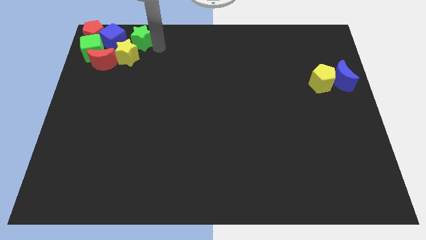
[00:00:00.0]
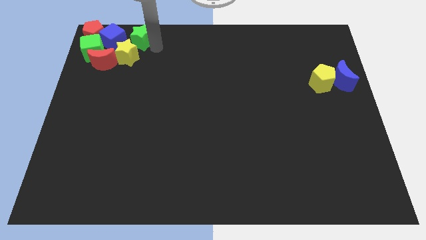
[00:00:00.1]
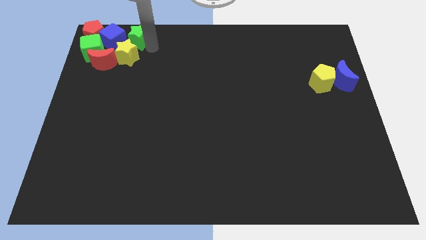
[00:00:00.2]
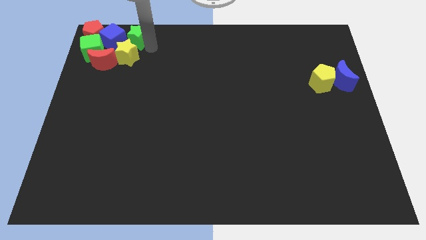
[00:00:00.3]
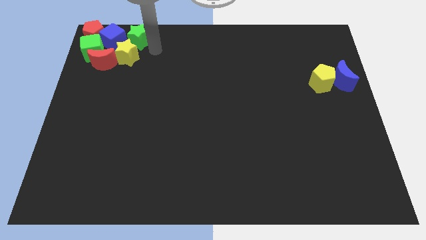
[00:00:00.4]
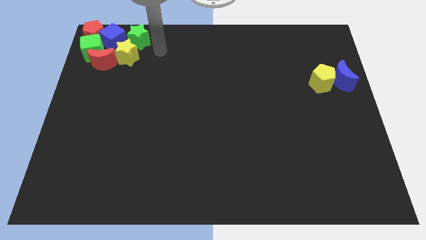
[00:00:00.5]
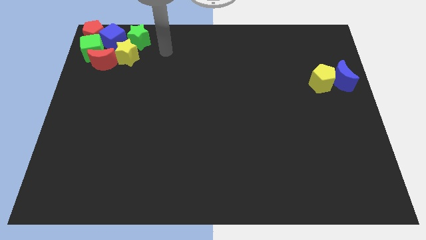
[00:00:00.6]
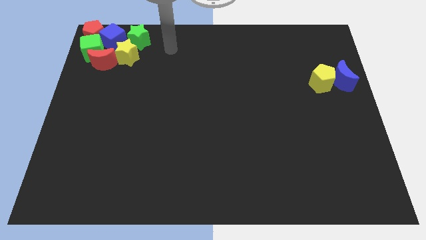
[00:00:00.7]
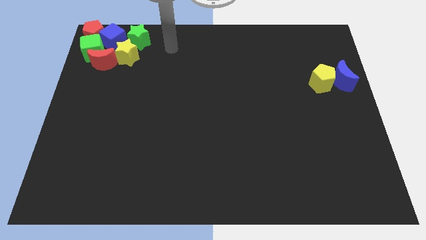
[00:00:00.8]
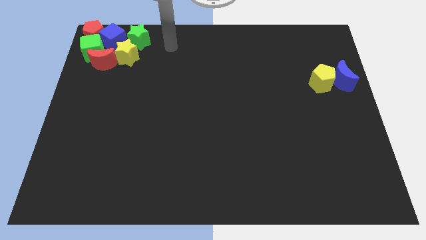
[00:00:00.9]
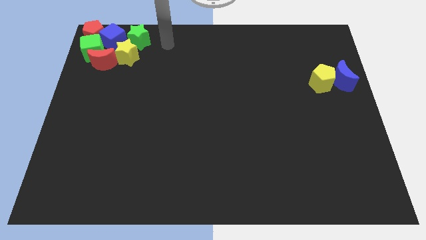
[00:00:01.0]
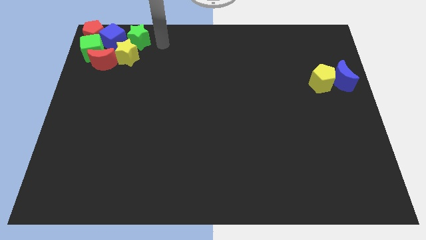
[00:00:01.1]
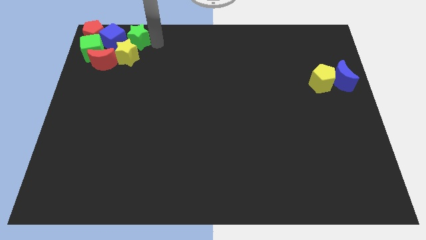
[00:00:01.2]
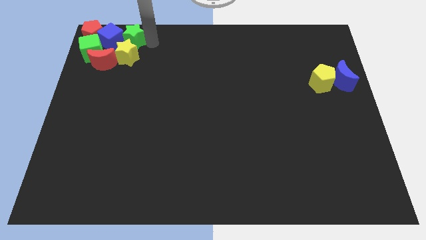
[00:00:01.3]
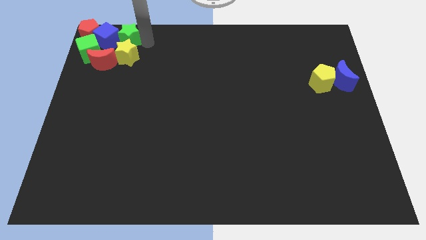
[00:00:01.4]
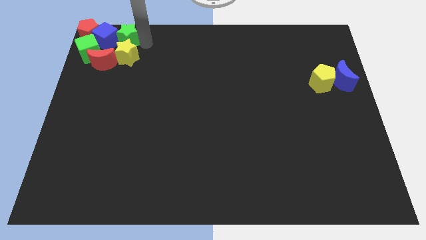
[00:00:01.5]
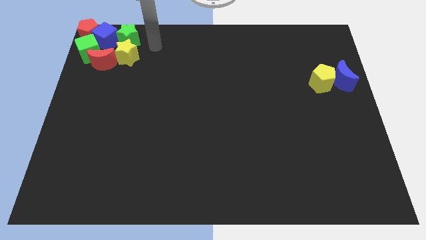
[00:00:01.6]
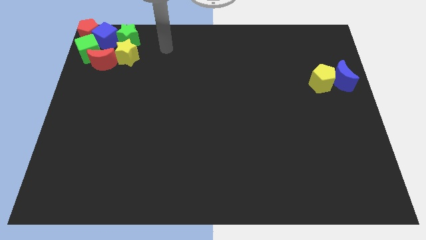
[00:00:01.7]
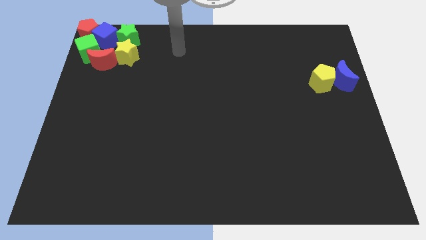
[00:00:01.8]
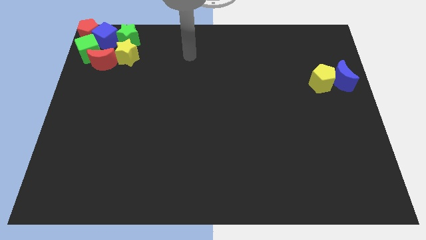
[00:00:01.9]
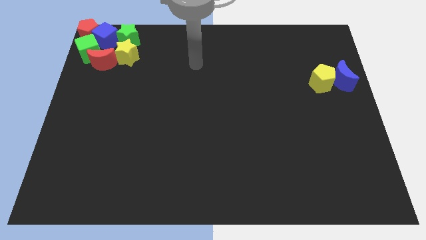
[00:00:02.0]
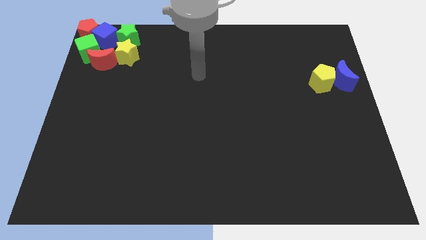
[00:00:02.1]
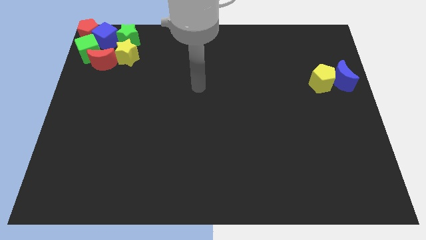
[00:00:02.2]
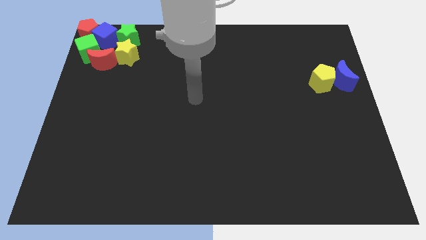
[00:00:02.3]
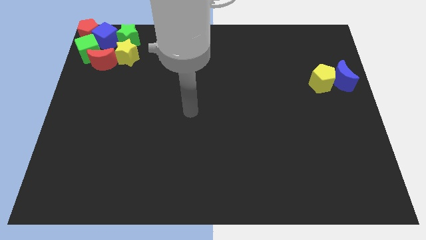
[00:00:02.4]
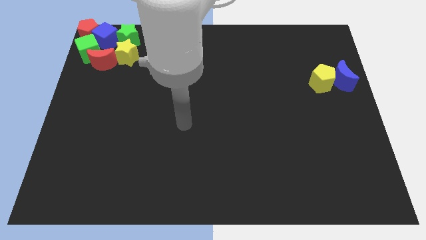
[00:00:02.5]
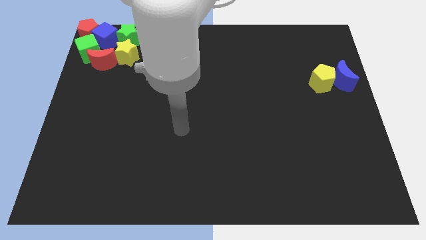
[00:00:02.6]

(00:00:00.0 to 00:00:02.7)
push the green star into the blue cube

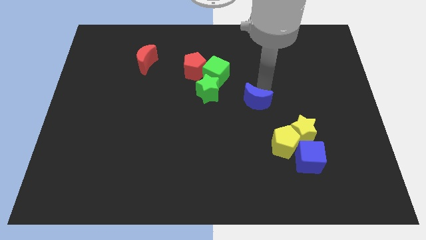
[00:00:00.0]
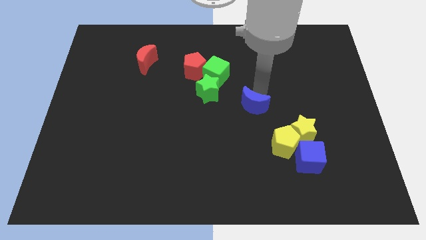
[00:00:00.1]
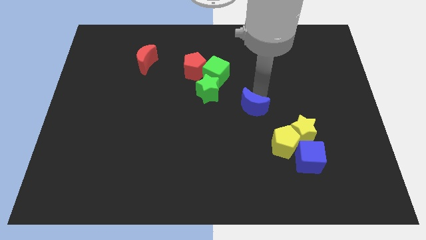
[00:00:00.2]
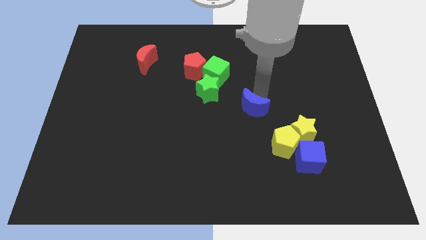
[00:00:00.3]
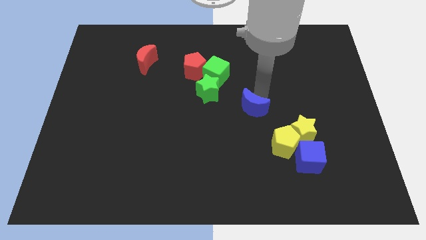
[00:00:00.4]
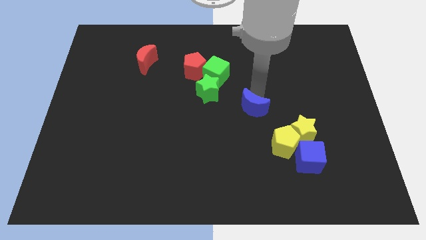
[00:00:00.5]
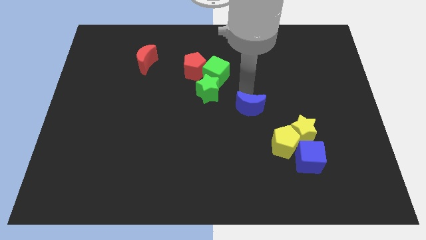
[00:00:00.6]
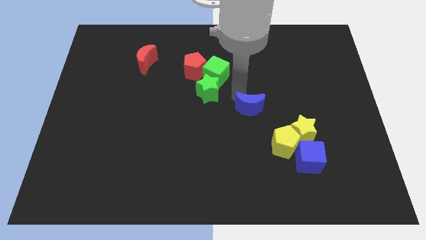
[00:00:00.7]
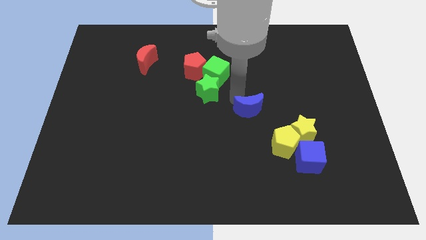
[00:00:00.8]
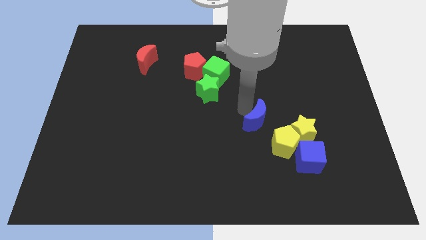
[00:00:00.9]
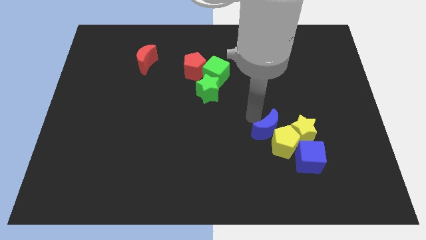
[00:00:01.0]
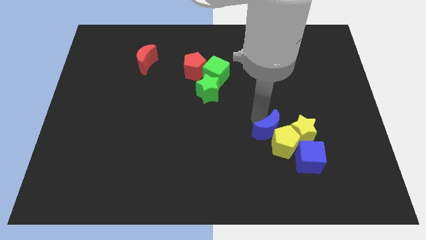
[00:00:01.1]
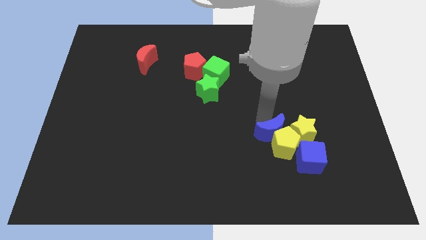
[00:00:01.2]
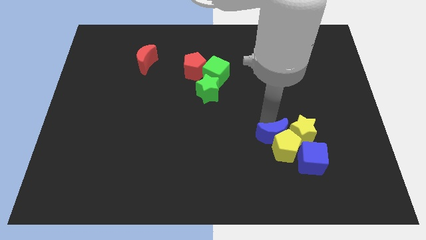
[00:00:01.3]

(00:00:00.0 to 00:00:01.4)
place the blue moon close to the yellow pentagon

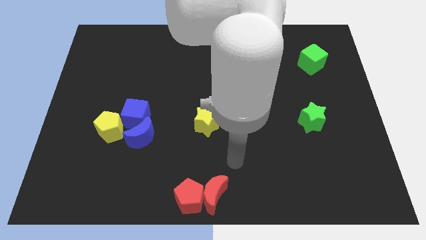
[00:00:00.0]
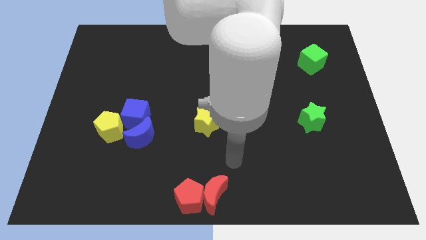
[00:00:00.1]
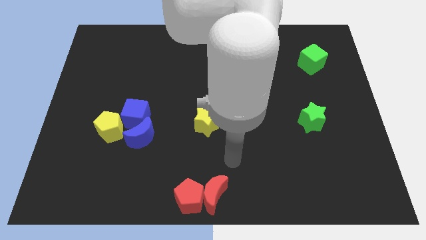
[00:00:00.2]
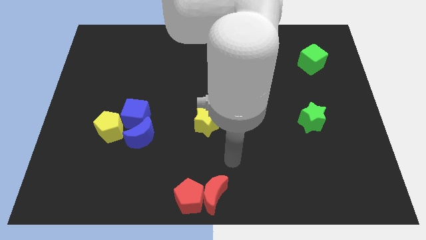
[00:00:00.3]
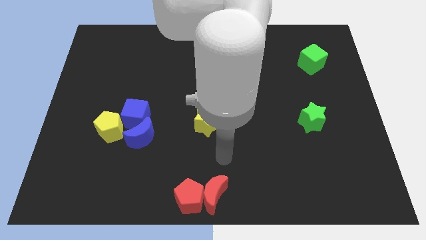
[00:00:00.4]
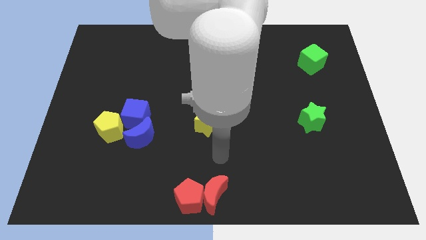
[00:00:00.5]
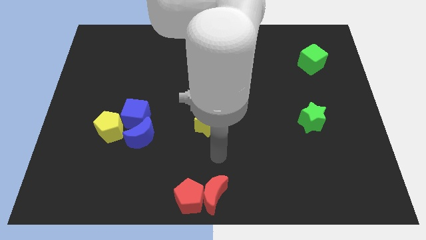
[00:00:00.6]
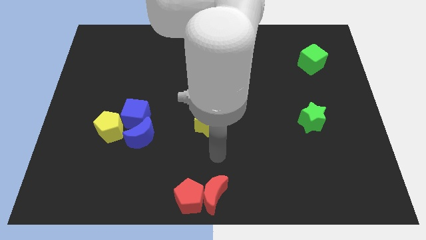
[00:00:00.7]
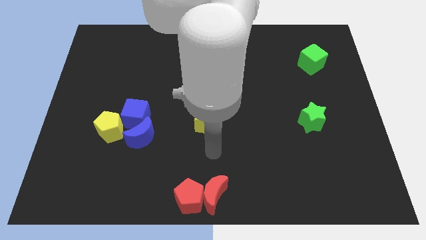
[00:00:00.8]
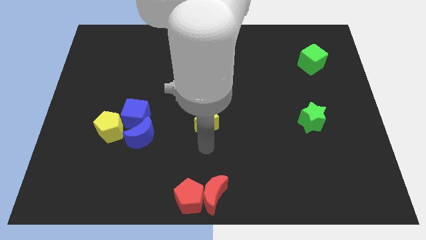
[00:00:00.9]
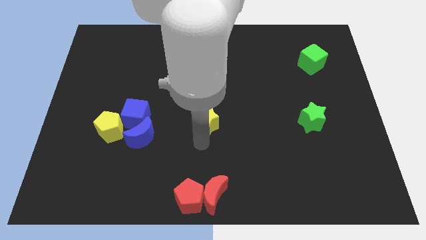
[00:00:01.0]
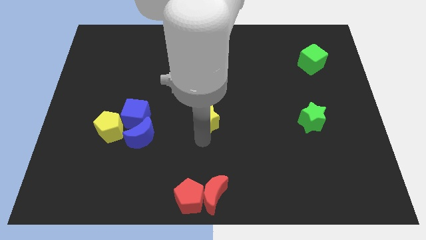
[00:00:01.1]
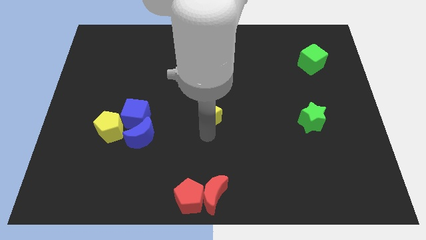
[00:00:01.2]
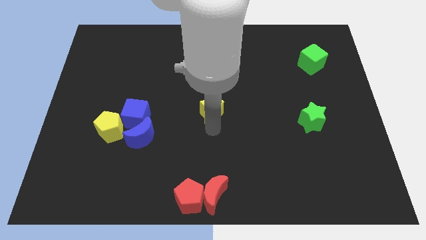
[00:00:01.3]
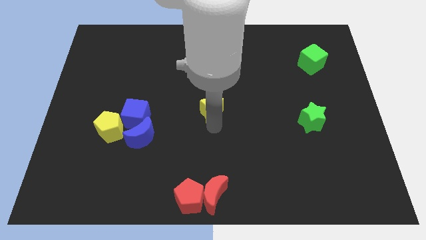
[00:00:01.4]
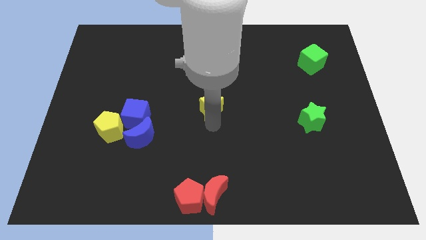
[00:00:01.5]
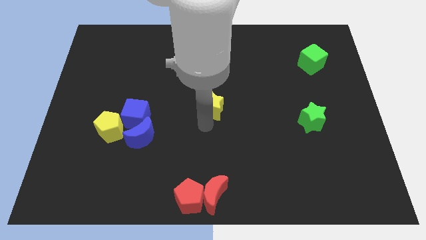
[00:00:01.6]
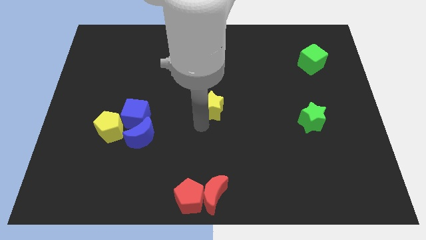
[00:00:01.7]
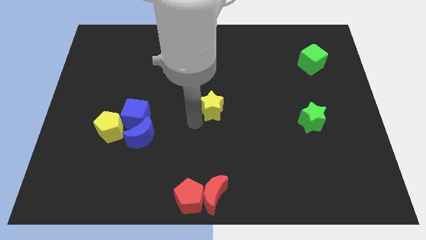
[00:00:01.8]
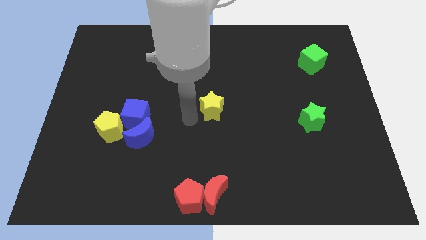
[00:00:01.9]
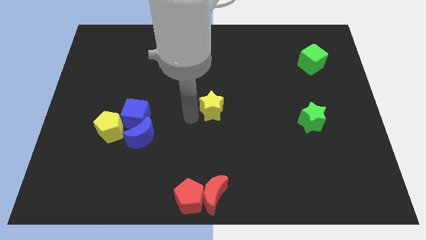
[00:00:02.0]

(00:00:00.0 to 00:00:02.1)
push the yellow star to the center of the board

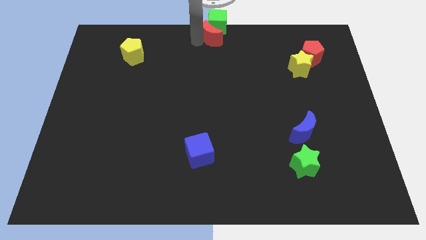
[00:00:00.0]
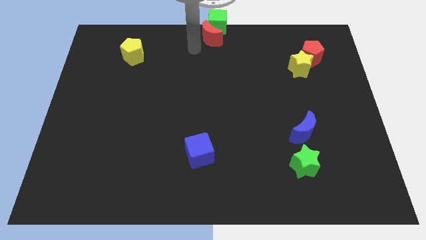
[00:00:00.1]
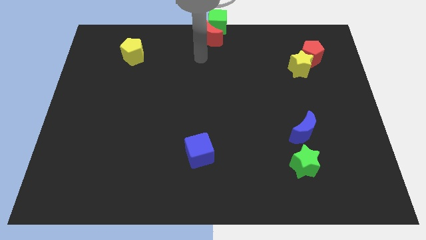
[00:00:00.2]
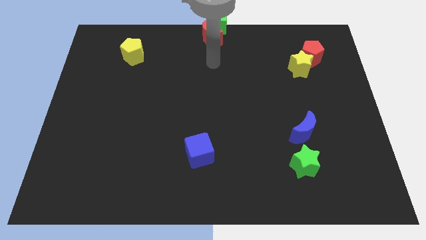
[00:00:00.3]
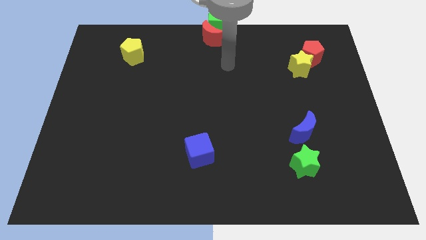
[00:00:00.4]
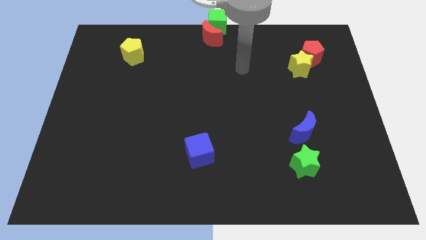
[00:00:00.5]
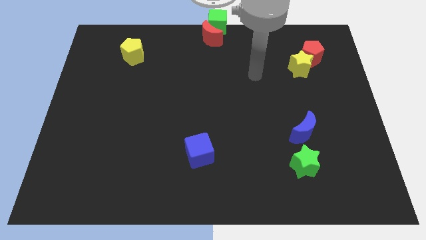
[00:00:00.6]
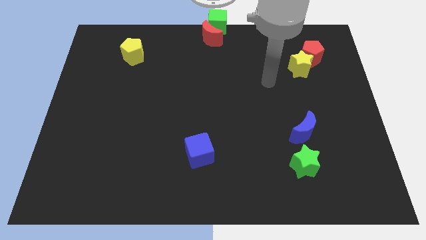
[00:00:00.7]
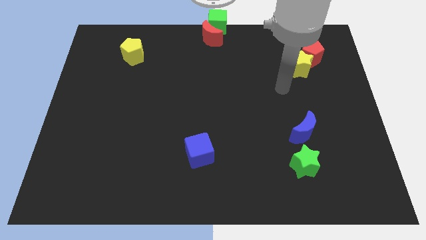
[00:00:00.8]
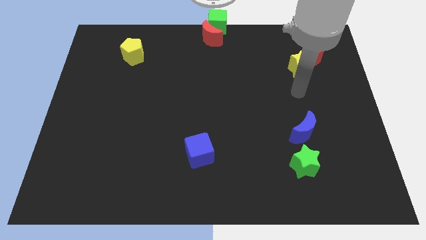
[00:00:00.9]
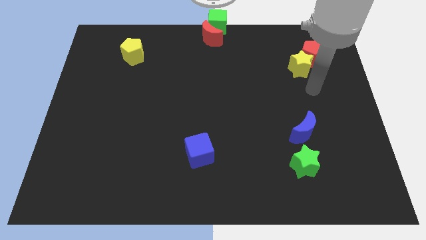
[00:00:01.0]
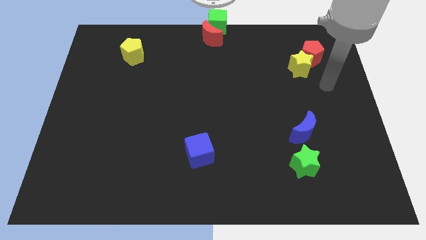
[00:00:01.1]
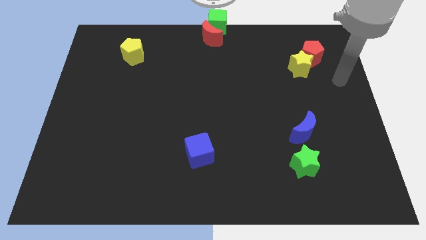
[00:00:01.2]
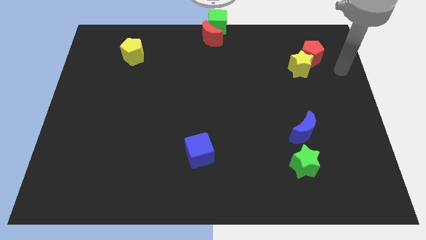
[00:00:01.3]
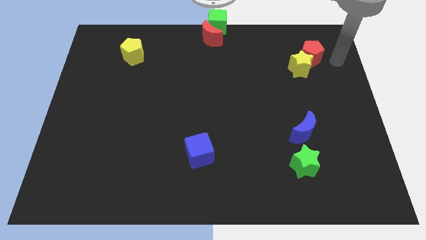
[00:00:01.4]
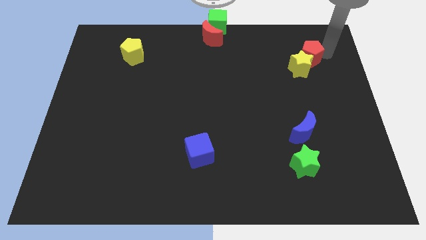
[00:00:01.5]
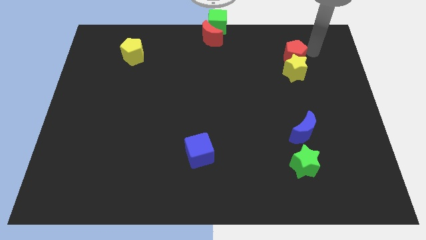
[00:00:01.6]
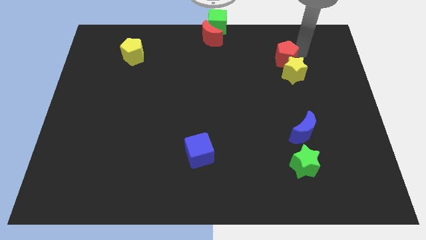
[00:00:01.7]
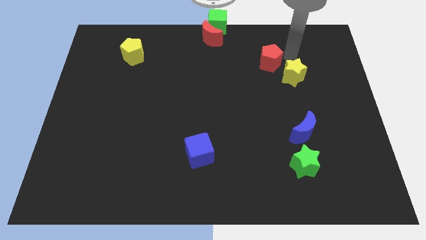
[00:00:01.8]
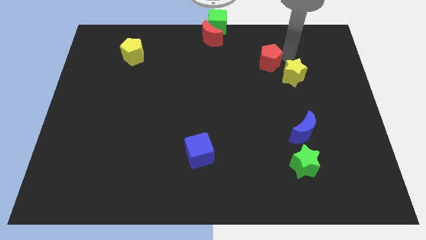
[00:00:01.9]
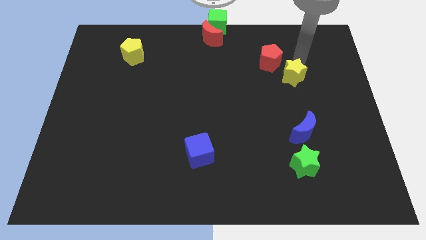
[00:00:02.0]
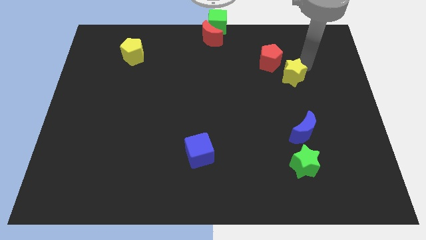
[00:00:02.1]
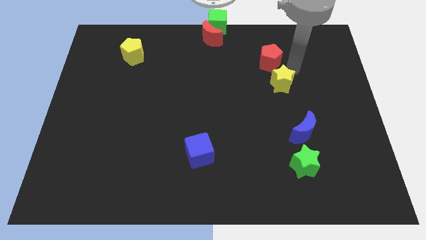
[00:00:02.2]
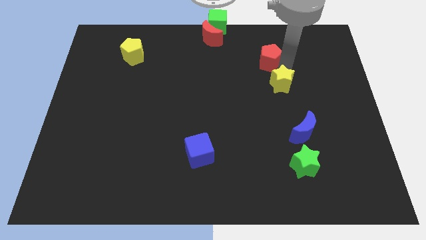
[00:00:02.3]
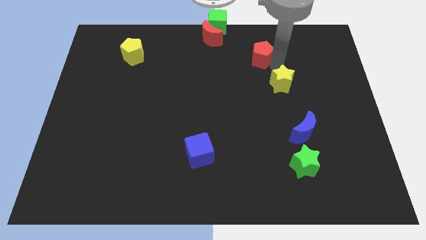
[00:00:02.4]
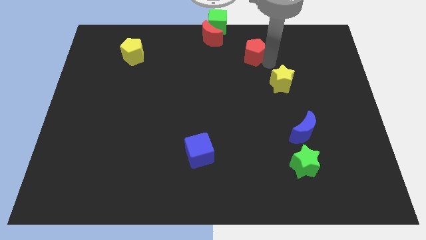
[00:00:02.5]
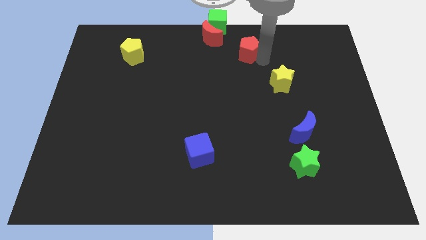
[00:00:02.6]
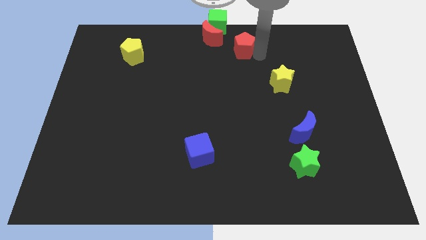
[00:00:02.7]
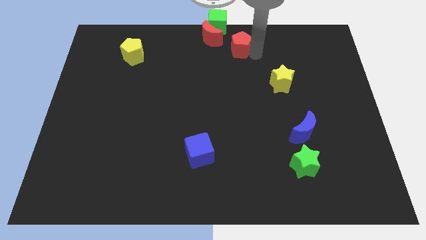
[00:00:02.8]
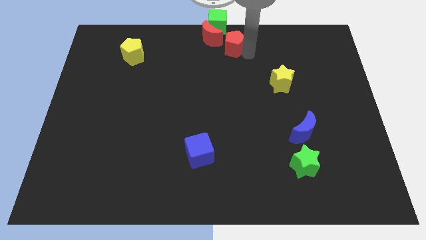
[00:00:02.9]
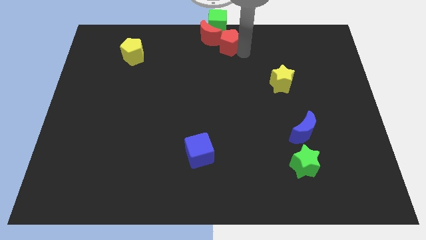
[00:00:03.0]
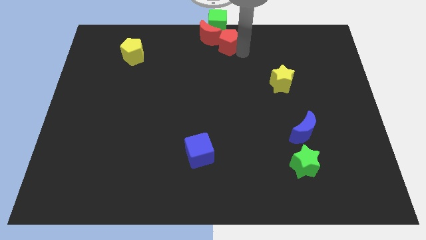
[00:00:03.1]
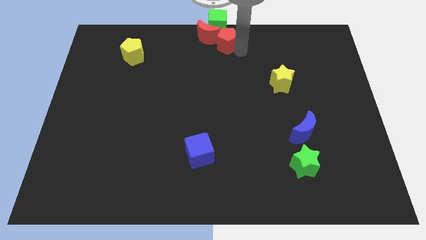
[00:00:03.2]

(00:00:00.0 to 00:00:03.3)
place the red pentagon right to the red crescent
